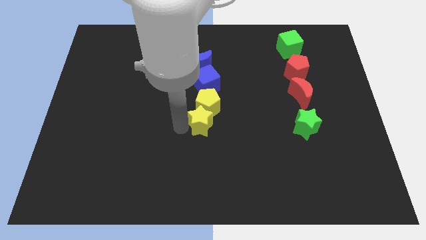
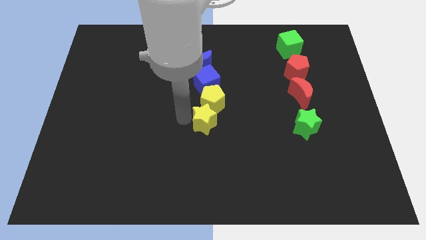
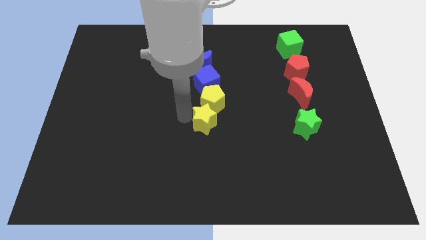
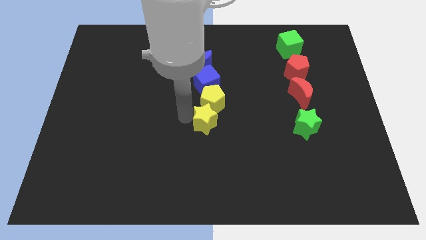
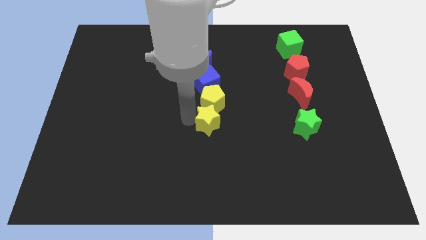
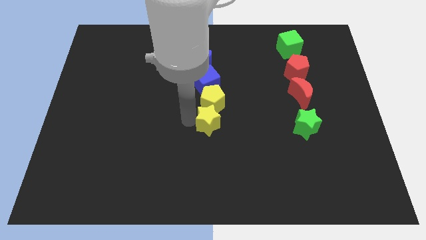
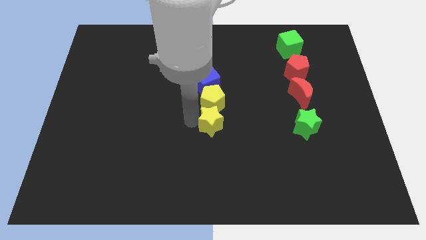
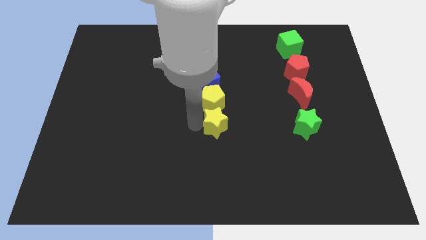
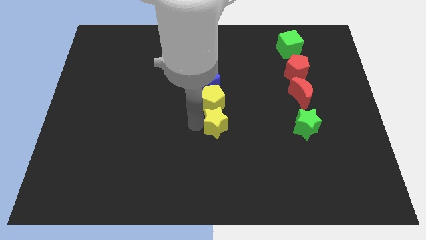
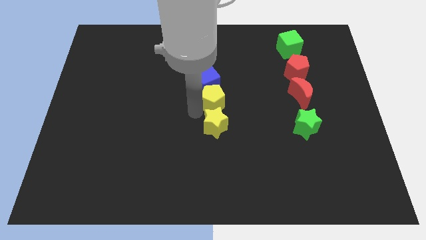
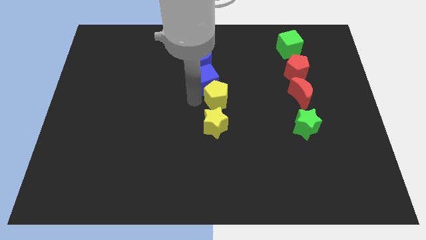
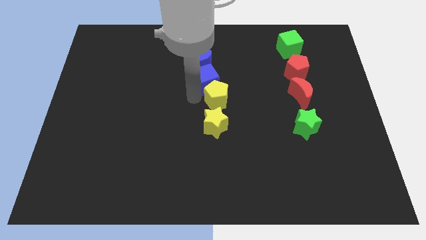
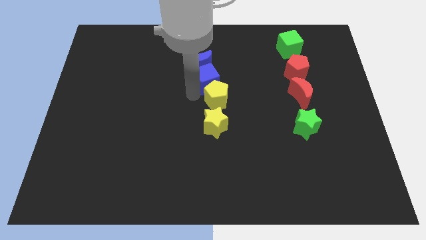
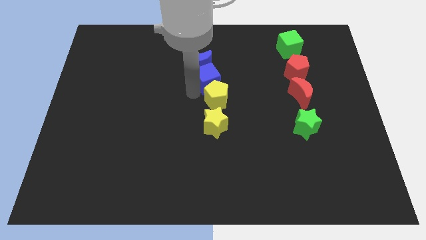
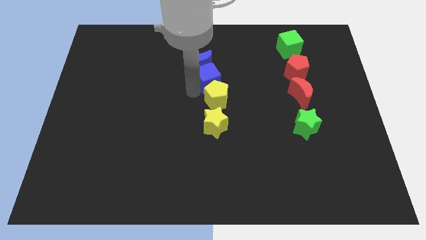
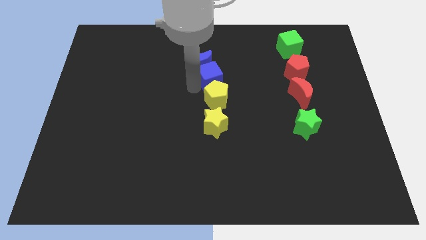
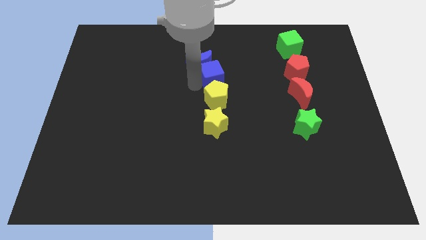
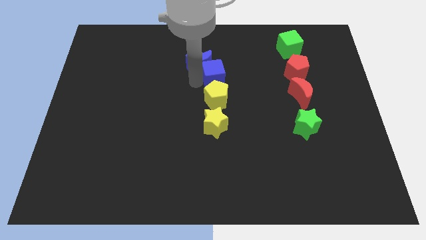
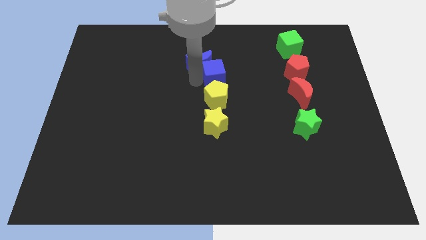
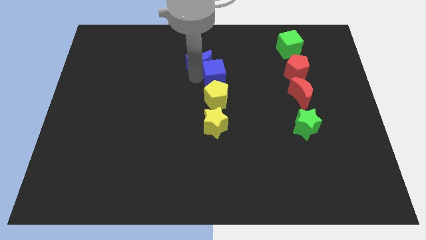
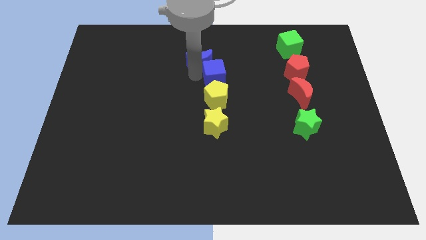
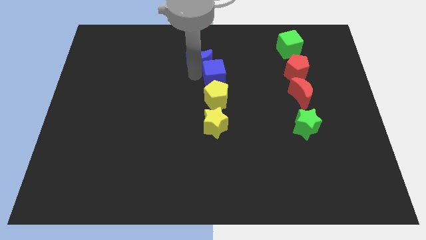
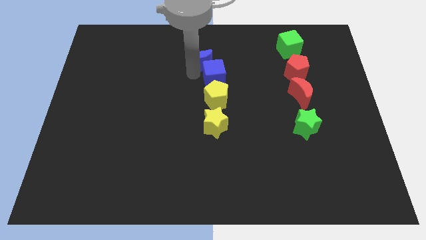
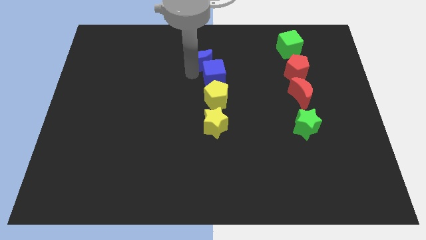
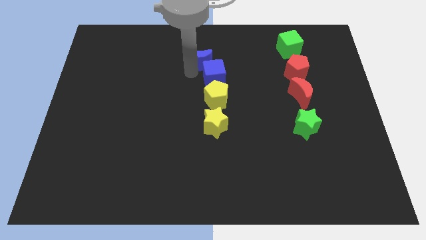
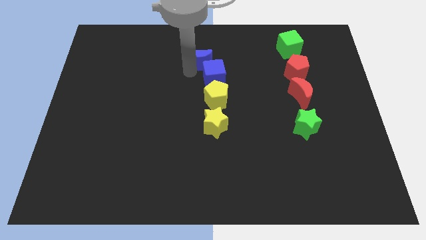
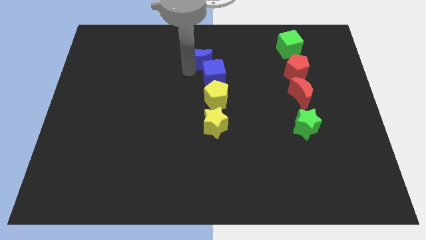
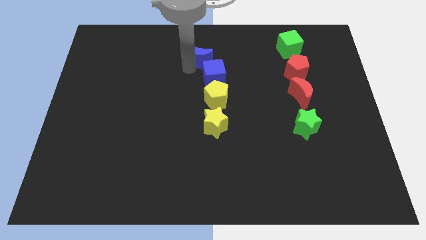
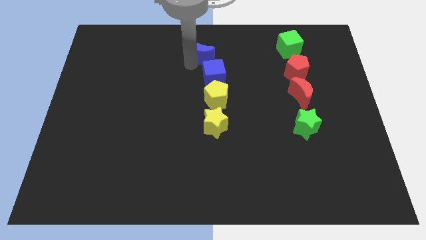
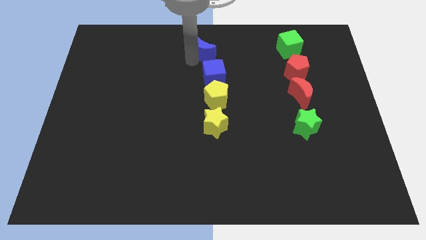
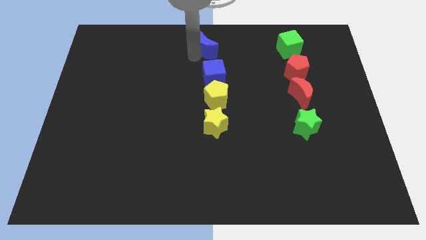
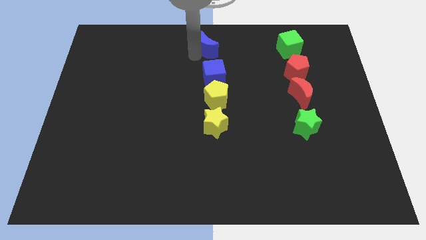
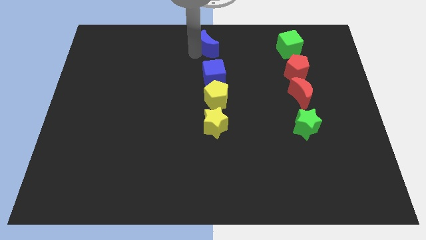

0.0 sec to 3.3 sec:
make a vertical line out of the blue and the yellow blocks

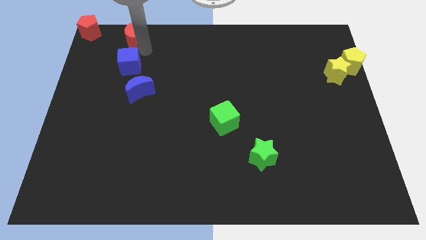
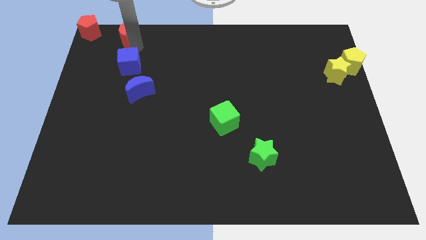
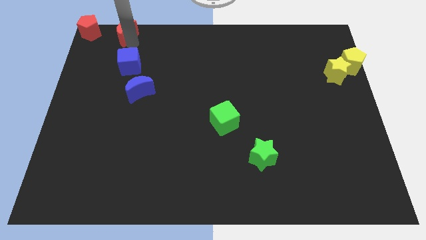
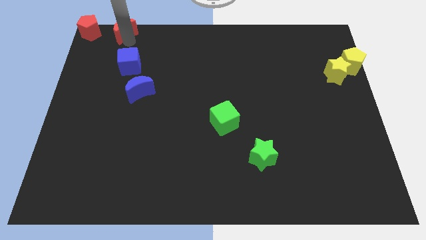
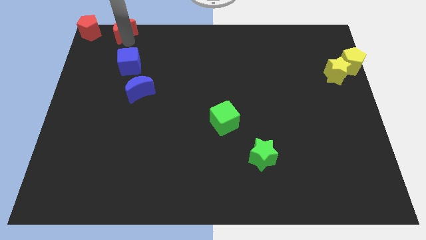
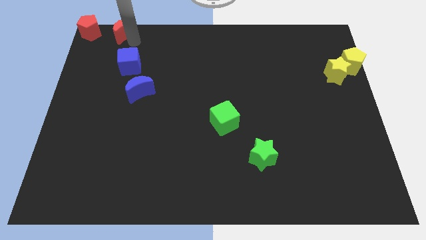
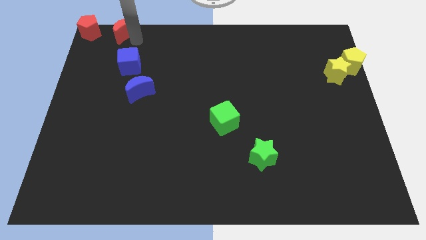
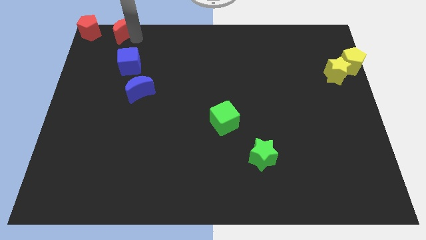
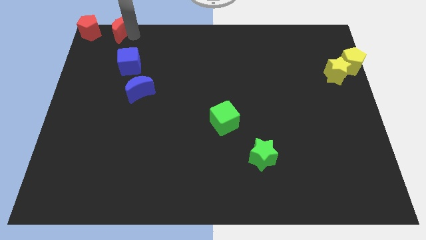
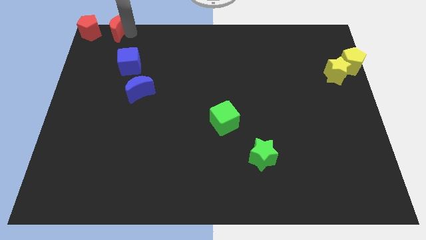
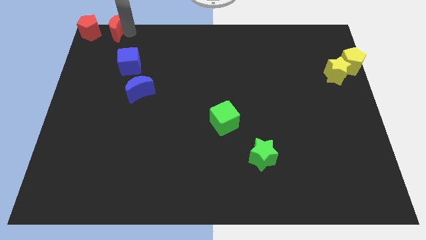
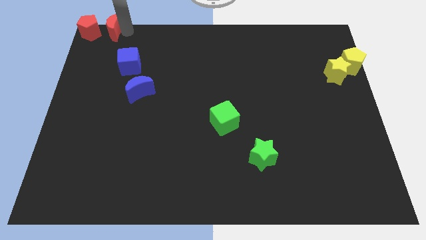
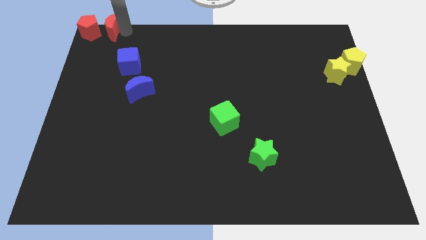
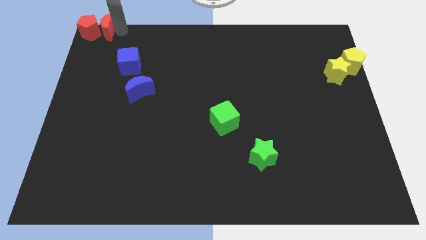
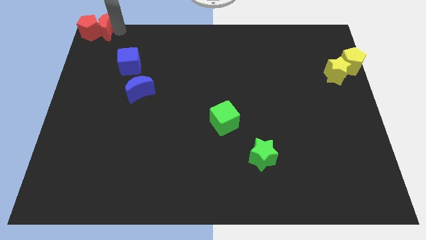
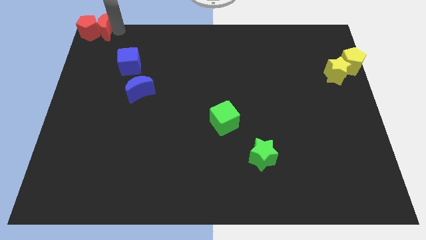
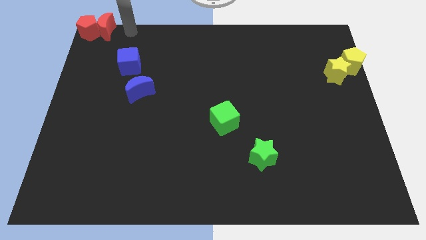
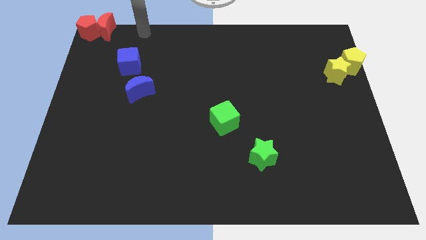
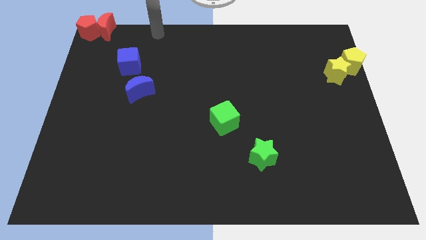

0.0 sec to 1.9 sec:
push the red crescent into red pentagon

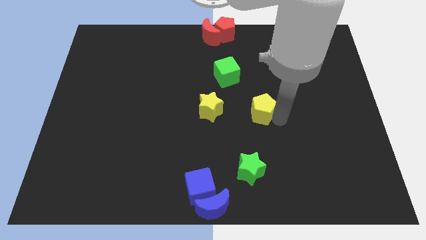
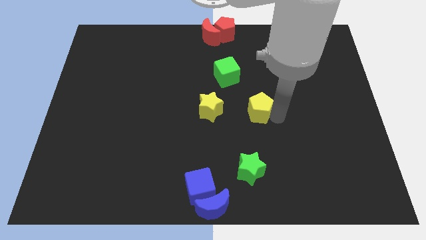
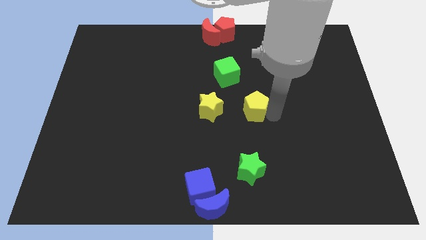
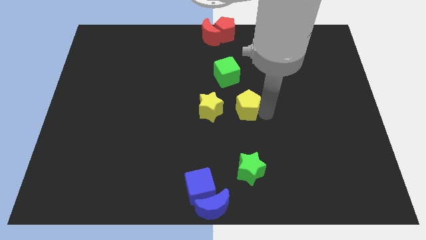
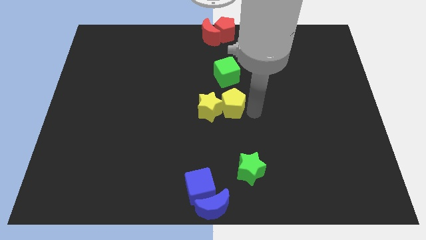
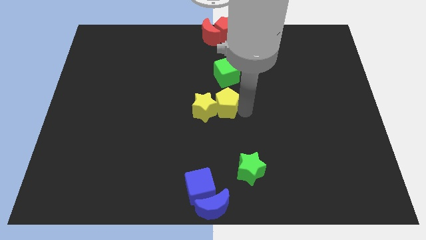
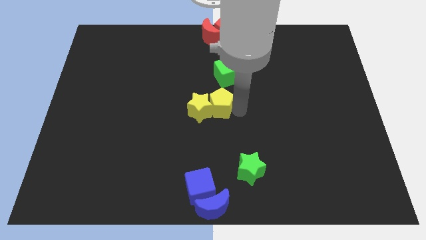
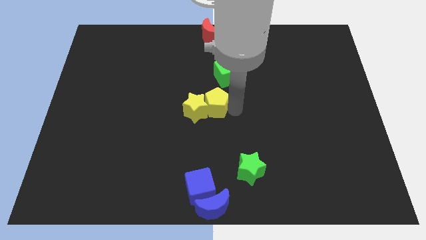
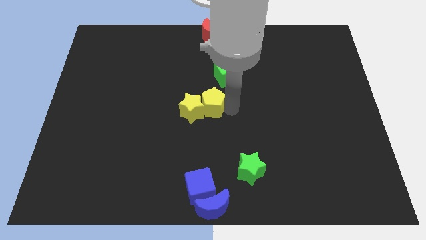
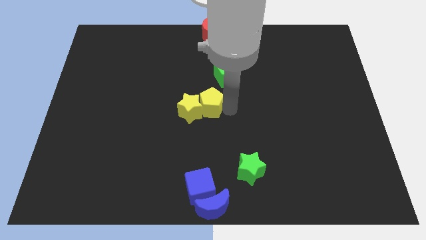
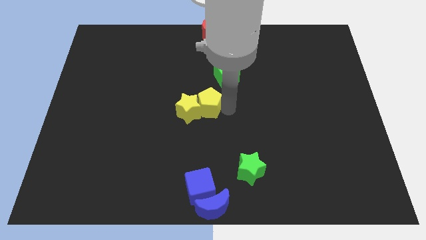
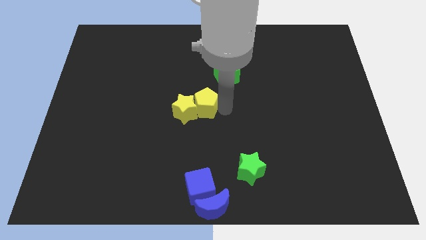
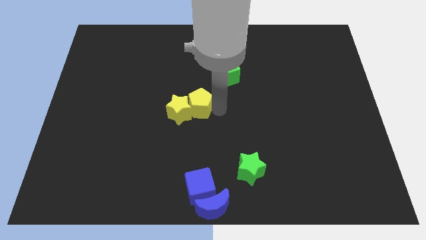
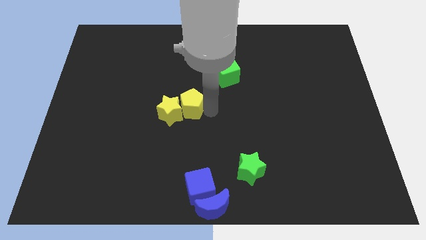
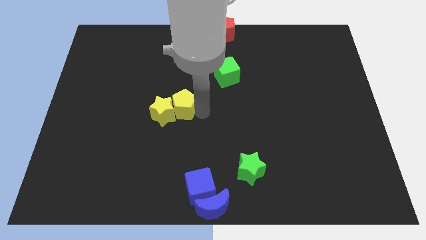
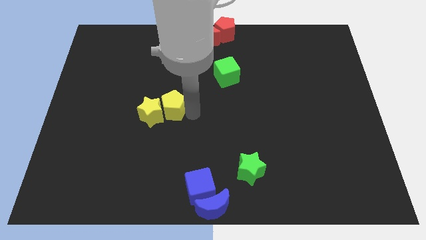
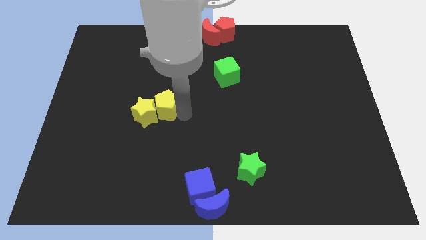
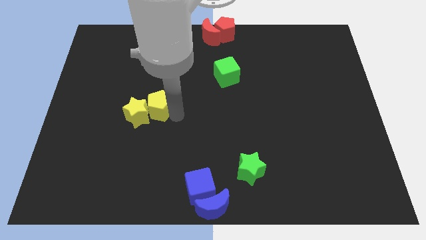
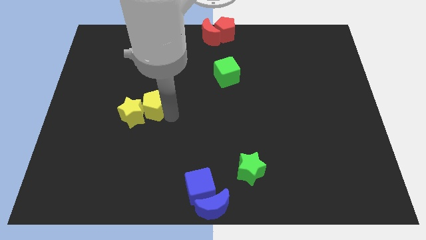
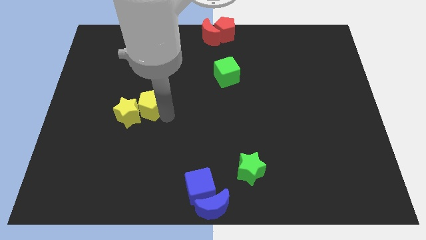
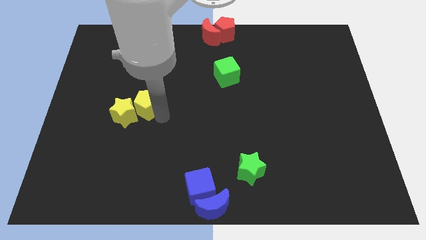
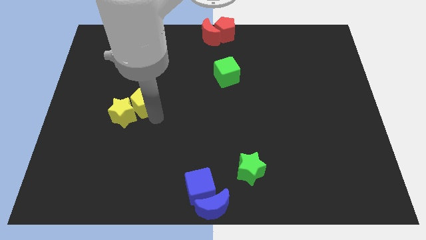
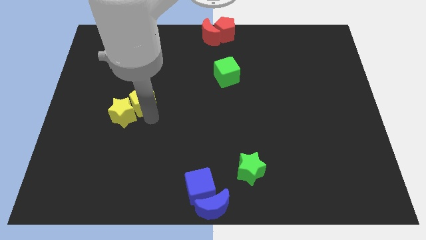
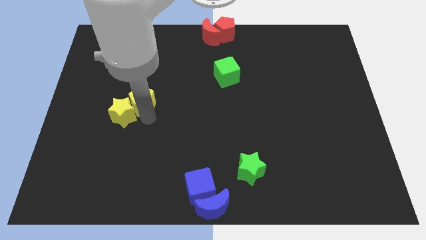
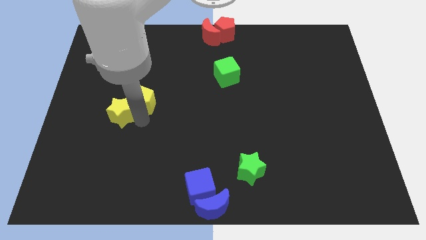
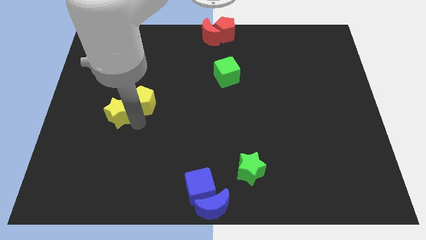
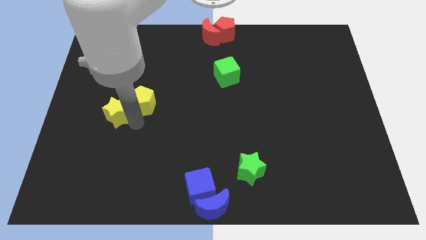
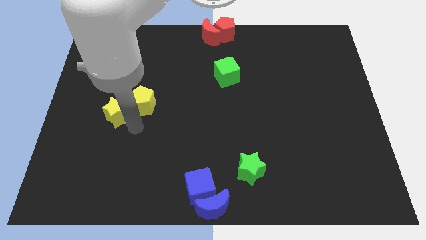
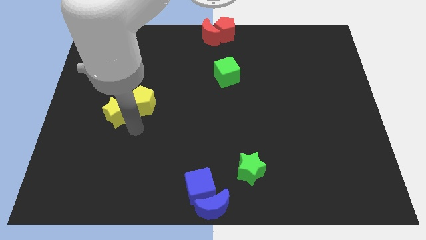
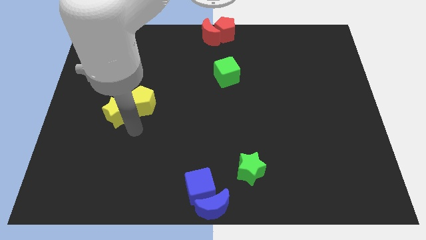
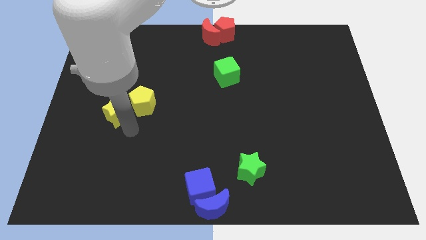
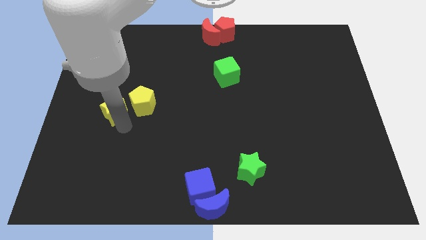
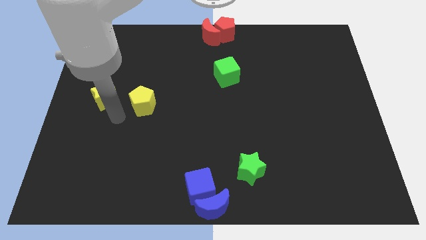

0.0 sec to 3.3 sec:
push the yellow pentagon along with the yellow star to the left side

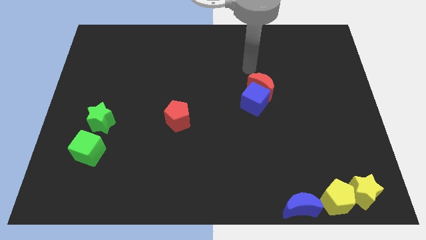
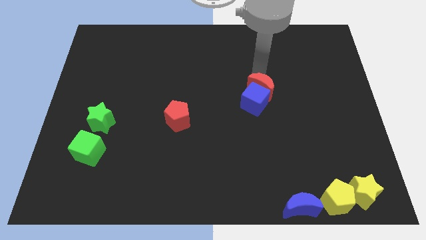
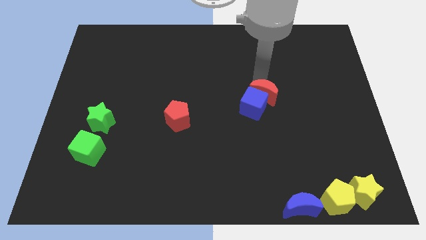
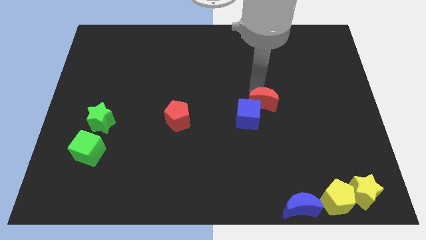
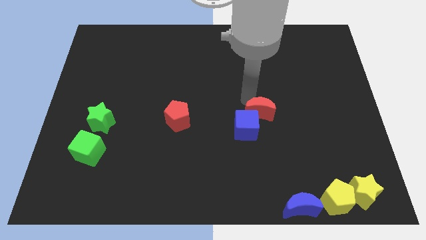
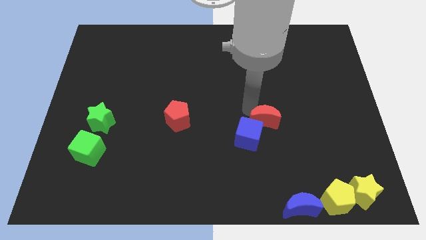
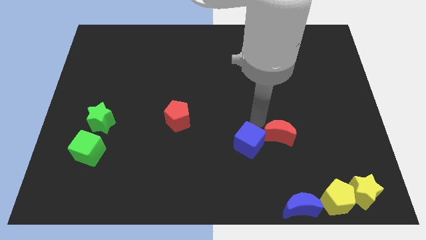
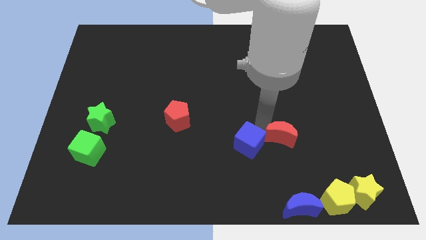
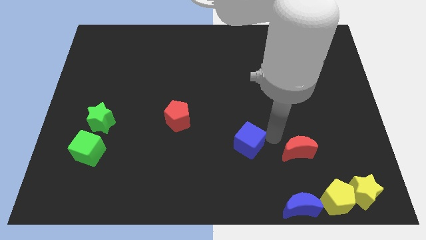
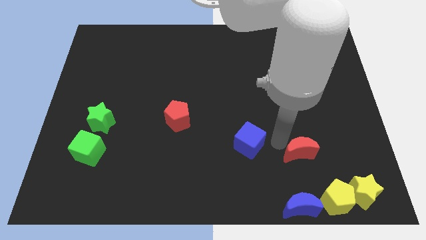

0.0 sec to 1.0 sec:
push the red crescent to the right of the blue cube
